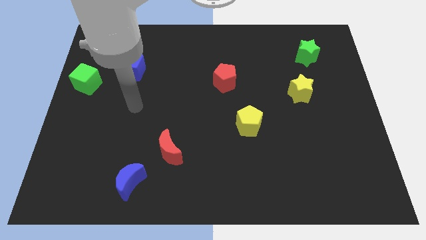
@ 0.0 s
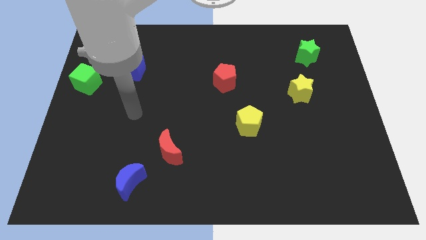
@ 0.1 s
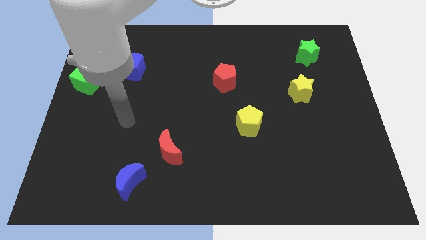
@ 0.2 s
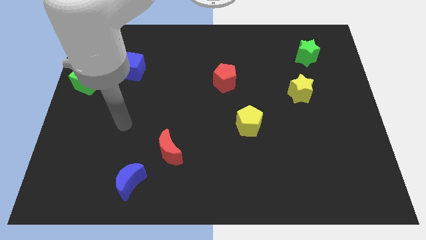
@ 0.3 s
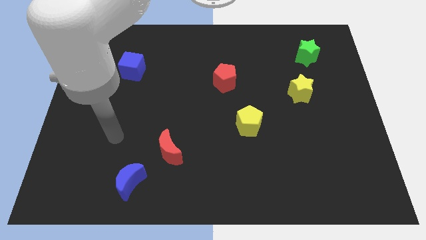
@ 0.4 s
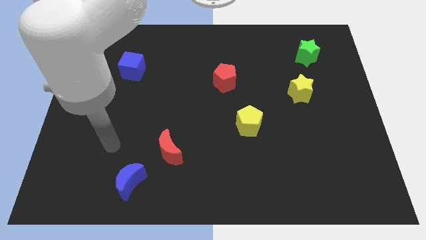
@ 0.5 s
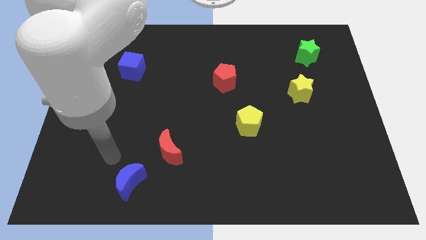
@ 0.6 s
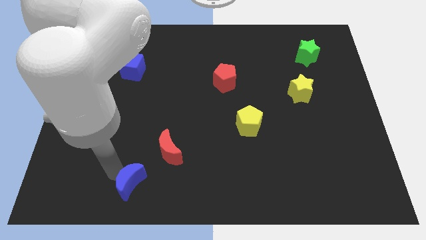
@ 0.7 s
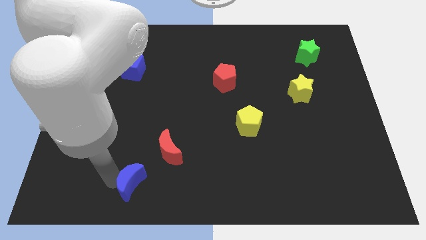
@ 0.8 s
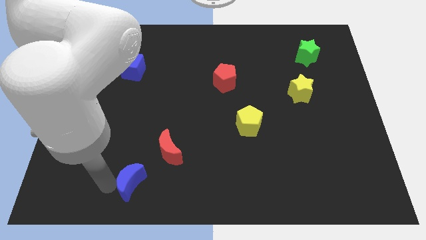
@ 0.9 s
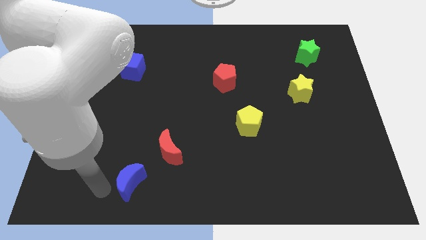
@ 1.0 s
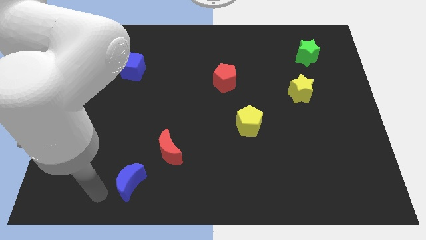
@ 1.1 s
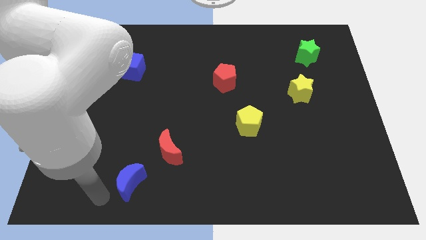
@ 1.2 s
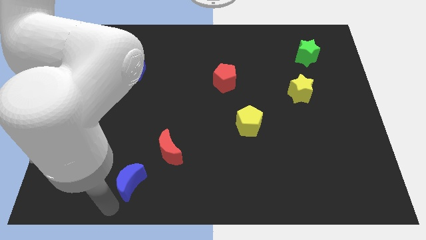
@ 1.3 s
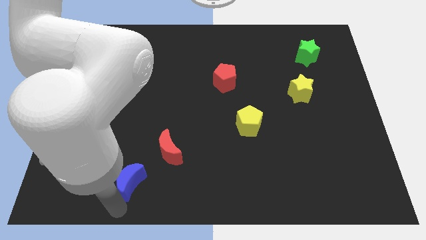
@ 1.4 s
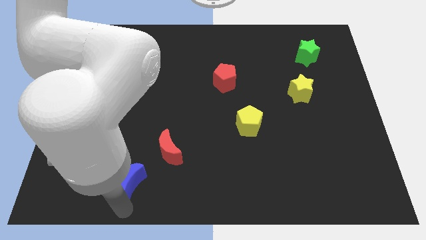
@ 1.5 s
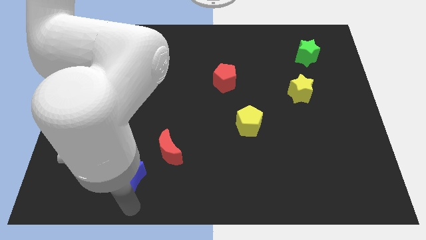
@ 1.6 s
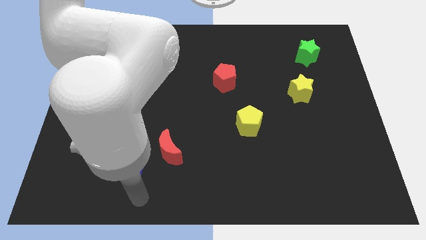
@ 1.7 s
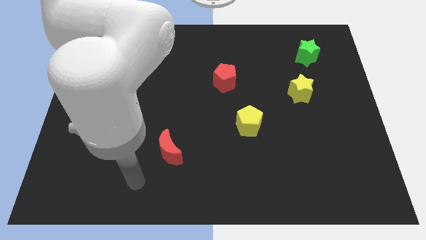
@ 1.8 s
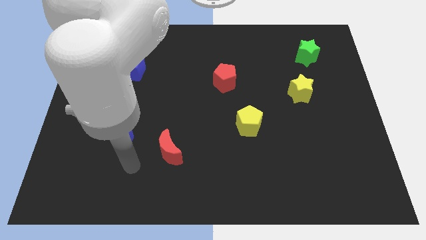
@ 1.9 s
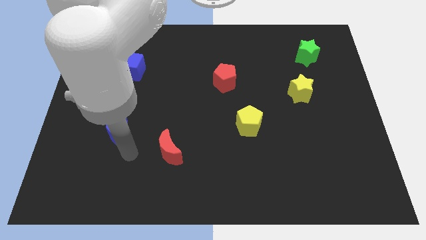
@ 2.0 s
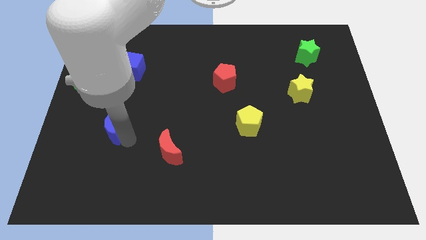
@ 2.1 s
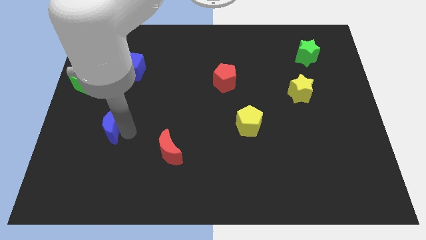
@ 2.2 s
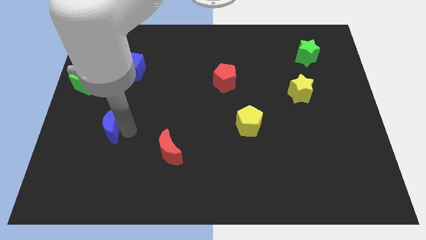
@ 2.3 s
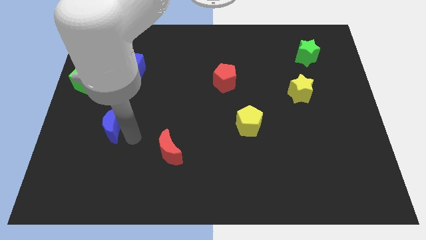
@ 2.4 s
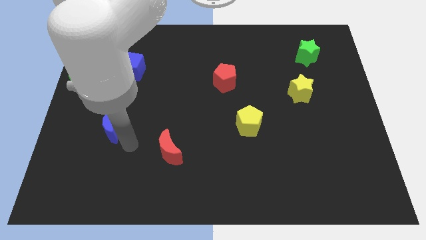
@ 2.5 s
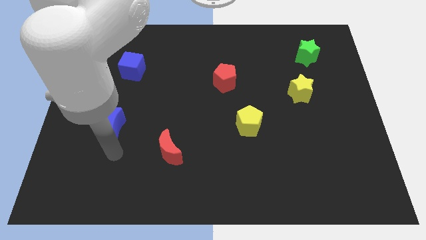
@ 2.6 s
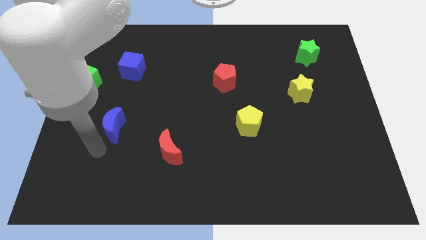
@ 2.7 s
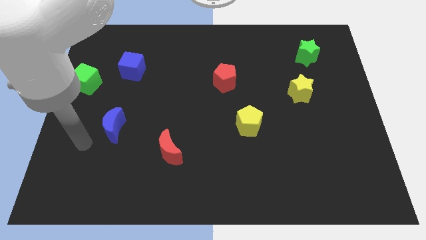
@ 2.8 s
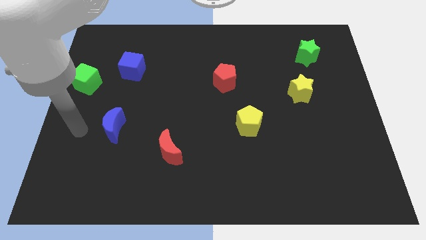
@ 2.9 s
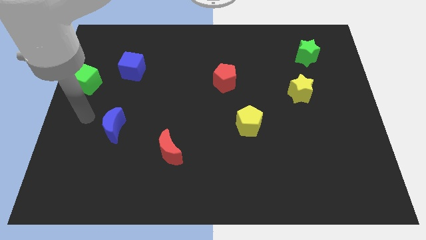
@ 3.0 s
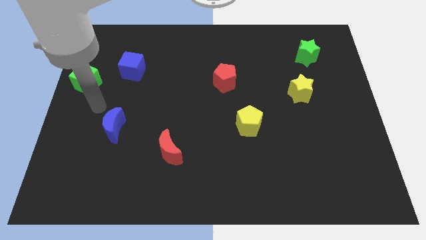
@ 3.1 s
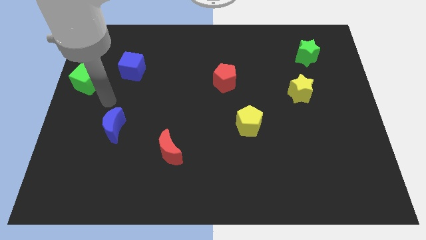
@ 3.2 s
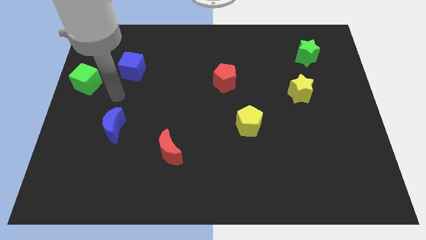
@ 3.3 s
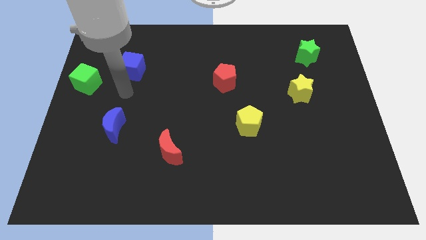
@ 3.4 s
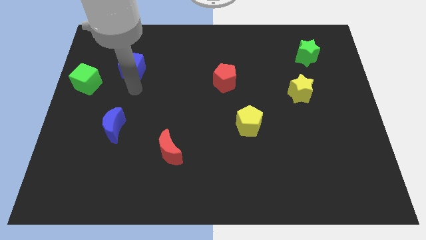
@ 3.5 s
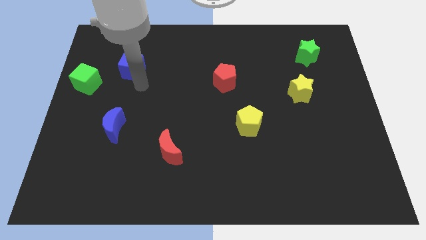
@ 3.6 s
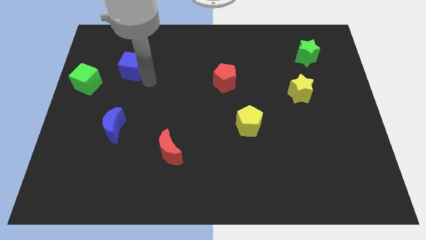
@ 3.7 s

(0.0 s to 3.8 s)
move the blue crescent underneath the blue cube

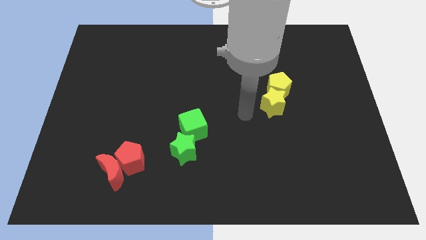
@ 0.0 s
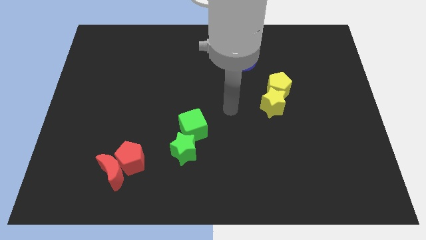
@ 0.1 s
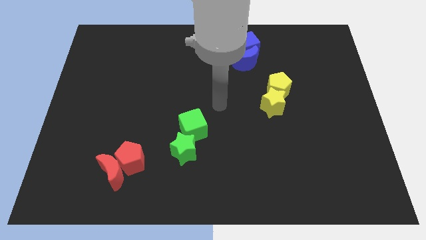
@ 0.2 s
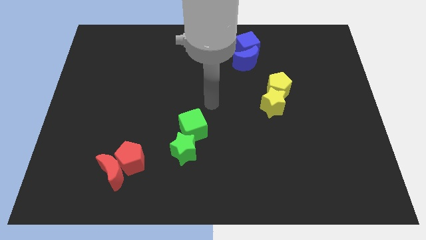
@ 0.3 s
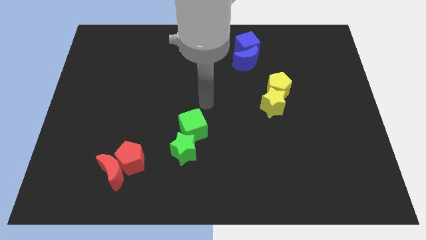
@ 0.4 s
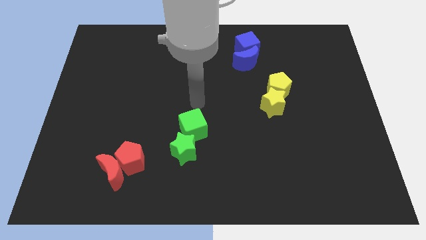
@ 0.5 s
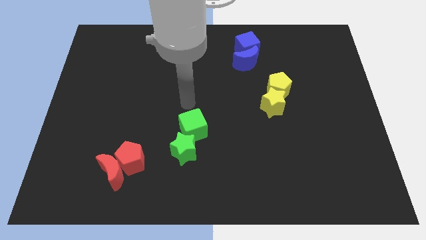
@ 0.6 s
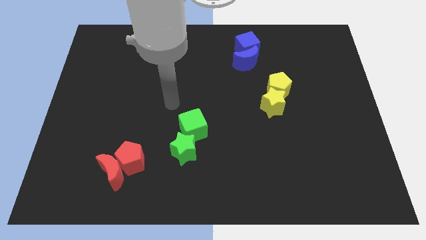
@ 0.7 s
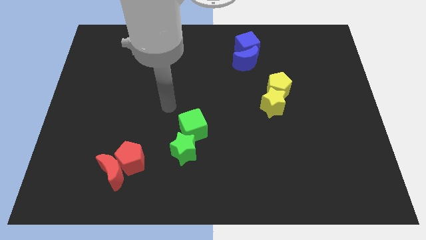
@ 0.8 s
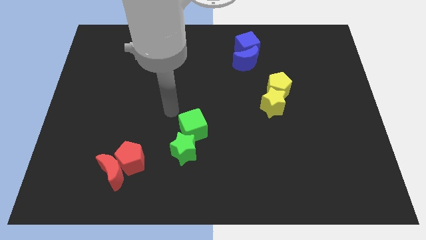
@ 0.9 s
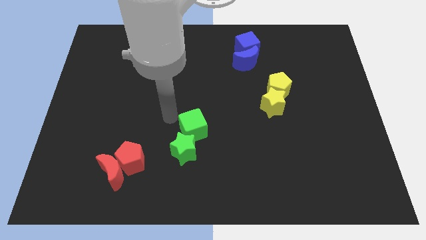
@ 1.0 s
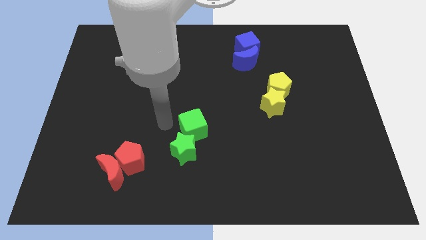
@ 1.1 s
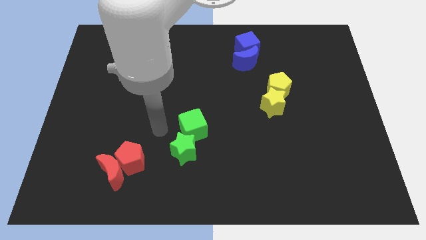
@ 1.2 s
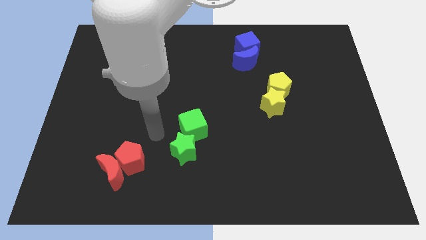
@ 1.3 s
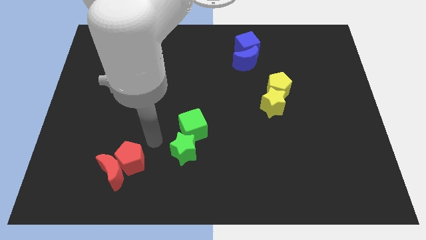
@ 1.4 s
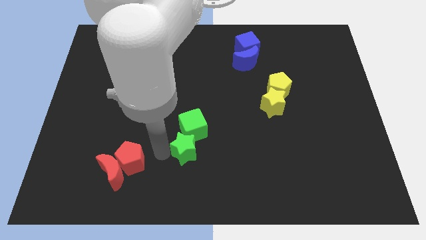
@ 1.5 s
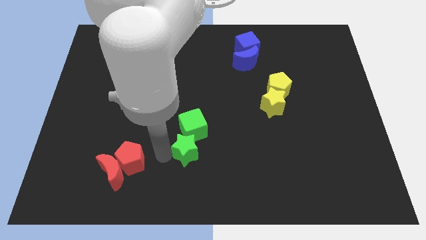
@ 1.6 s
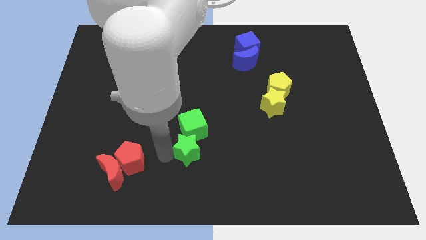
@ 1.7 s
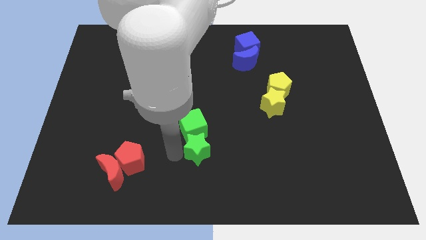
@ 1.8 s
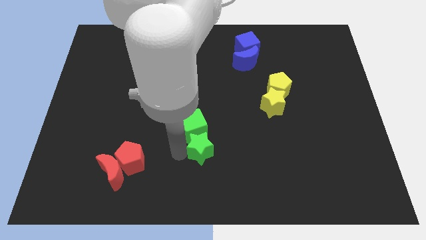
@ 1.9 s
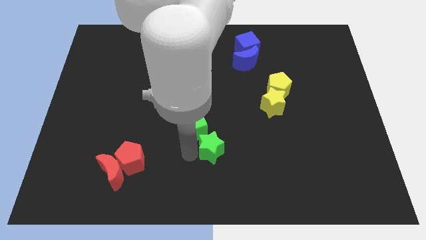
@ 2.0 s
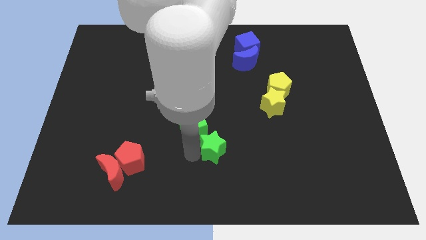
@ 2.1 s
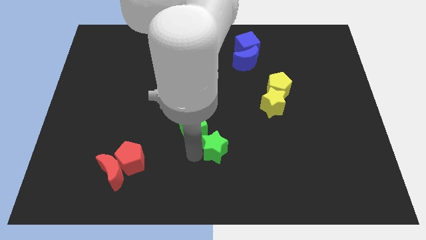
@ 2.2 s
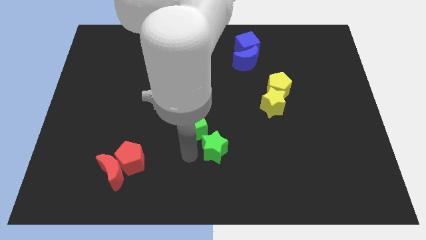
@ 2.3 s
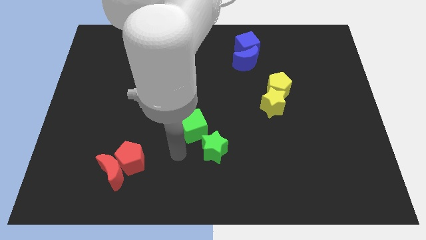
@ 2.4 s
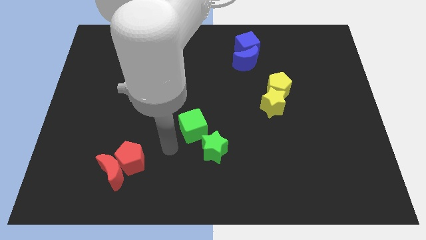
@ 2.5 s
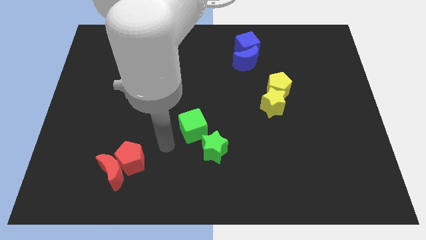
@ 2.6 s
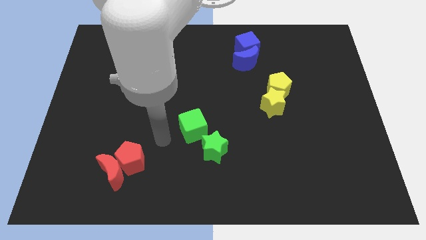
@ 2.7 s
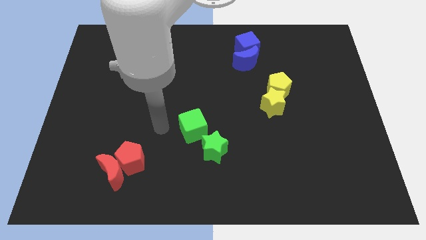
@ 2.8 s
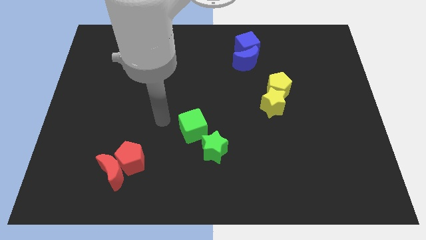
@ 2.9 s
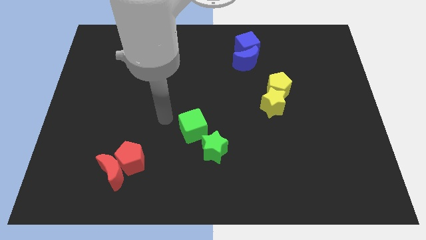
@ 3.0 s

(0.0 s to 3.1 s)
separate the green star from the green cube

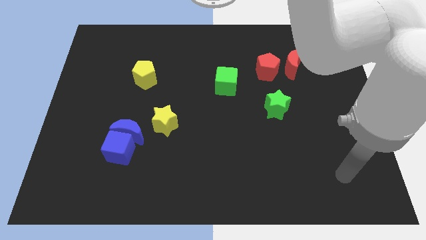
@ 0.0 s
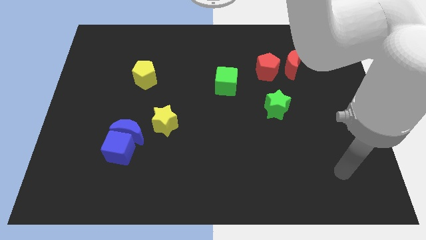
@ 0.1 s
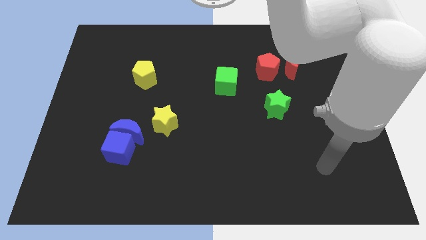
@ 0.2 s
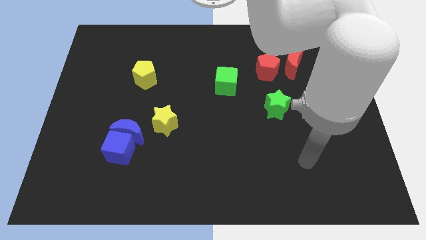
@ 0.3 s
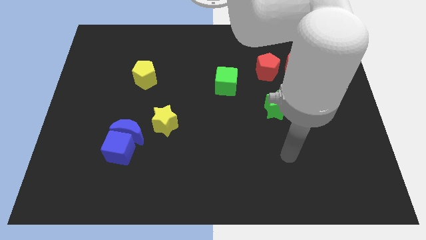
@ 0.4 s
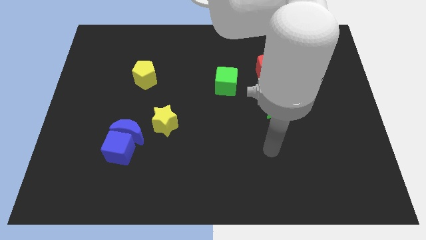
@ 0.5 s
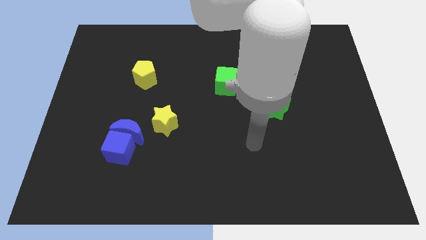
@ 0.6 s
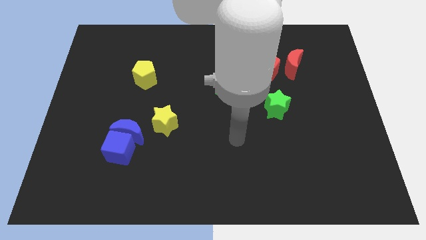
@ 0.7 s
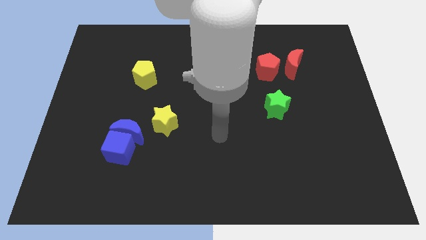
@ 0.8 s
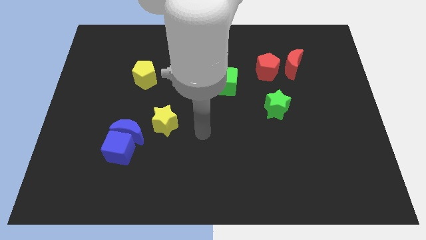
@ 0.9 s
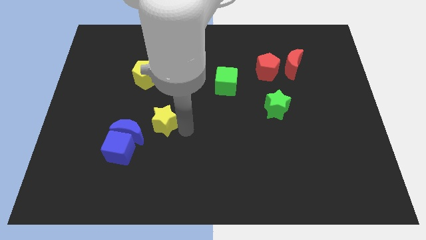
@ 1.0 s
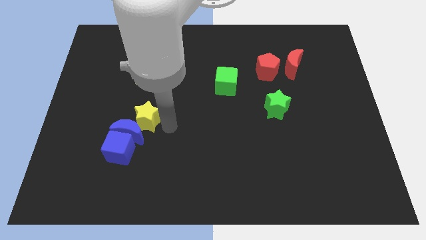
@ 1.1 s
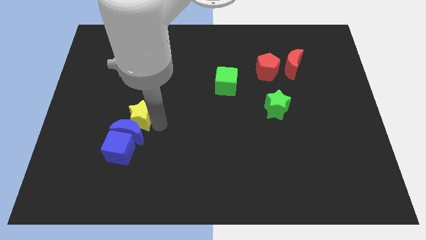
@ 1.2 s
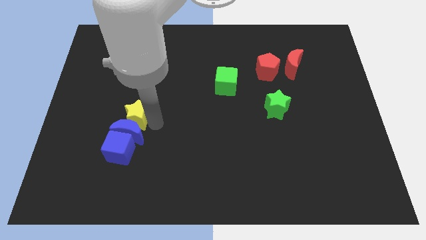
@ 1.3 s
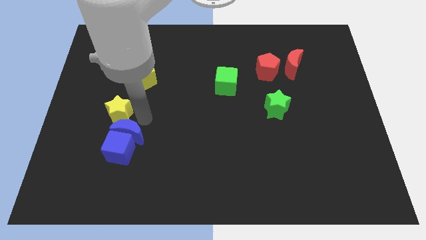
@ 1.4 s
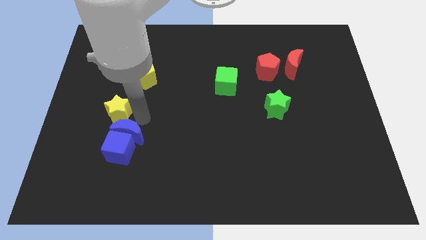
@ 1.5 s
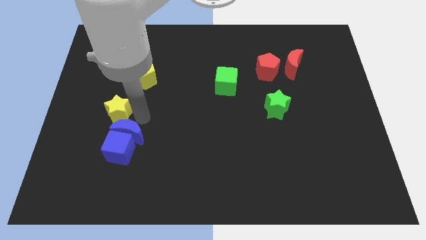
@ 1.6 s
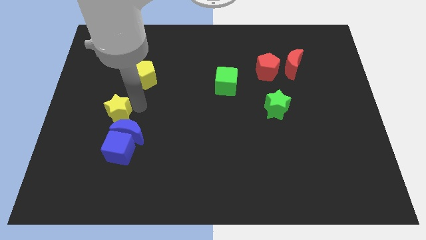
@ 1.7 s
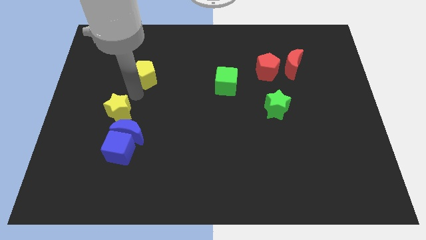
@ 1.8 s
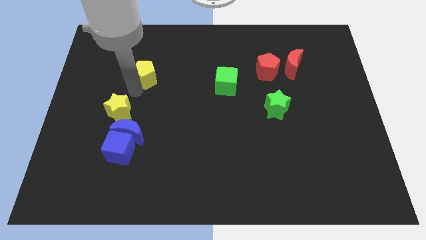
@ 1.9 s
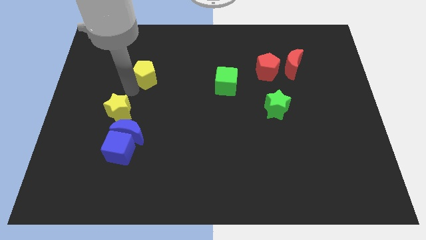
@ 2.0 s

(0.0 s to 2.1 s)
move the yellow star towards the top left side of the blue crescent
